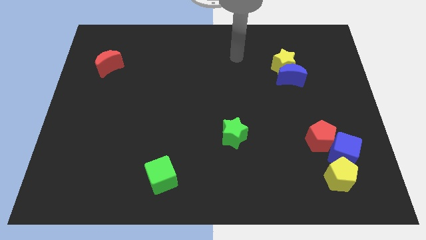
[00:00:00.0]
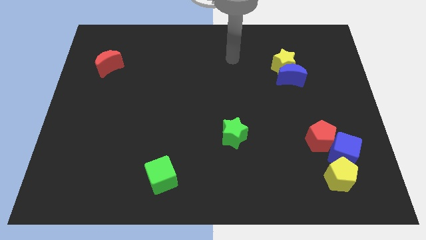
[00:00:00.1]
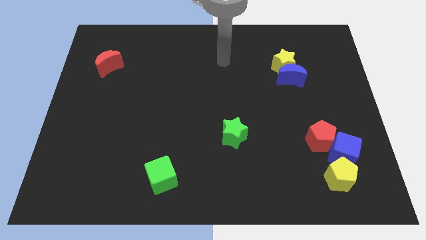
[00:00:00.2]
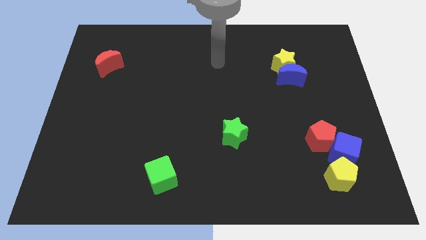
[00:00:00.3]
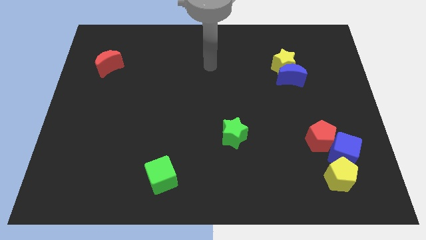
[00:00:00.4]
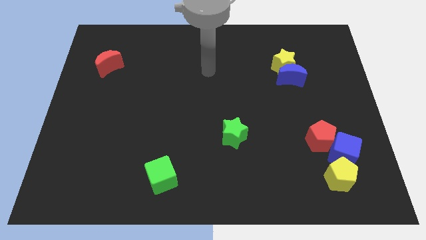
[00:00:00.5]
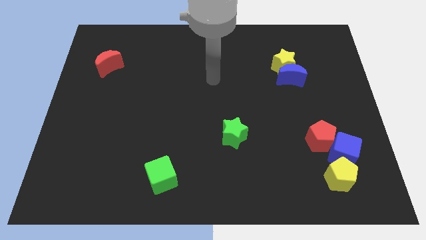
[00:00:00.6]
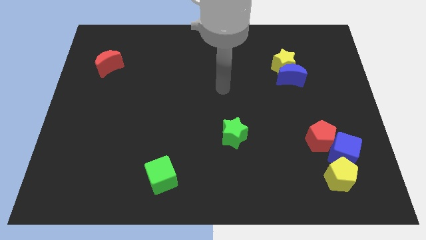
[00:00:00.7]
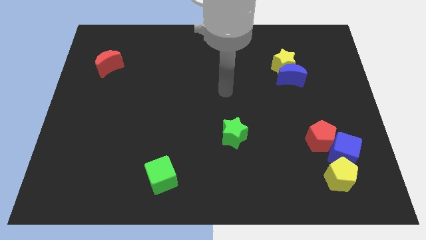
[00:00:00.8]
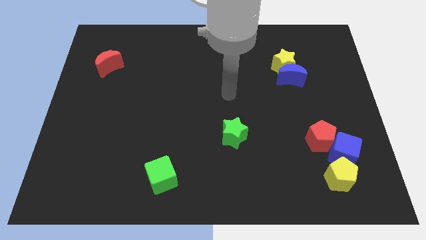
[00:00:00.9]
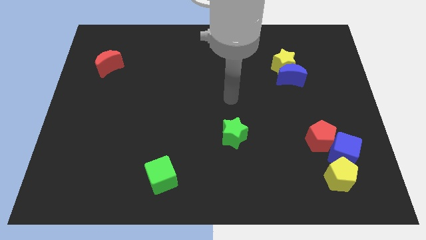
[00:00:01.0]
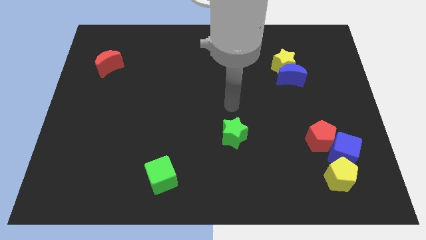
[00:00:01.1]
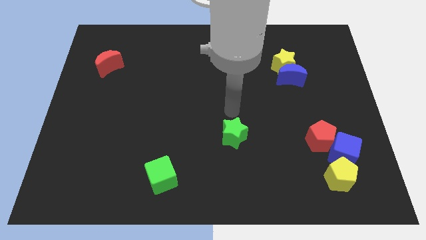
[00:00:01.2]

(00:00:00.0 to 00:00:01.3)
point your hand above the green star

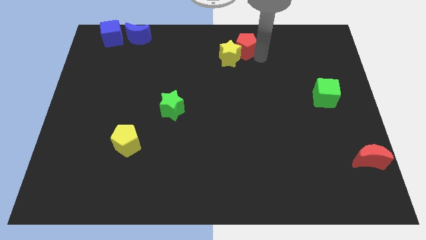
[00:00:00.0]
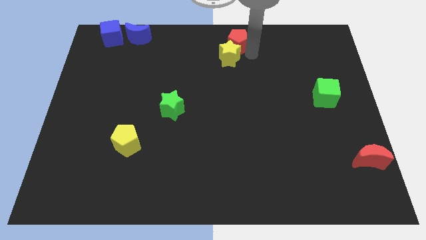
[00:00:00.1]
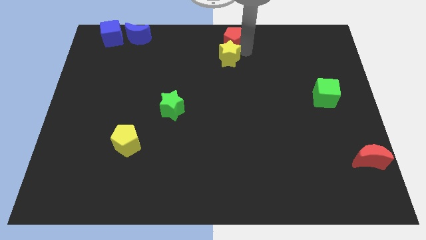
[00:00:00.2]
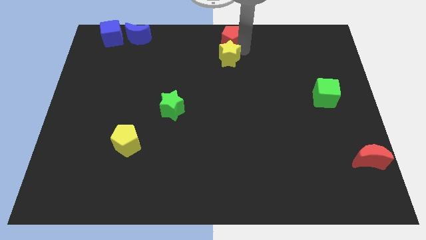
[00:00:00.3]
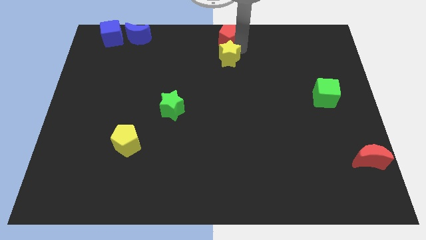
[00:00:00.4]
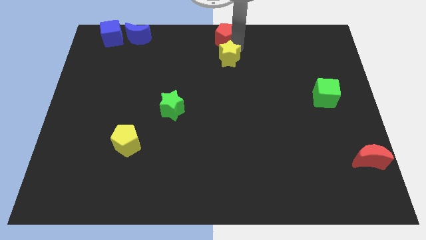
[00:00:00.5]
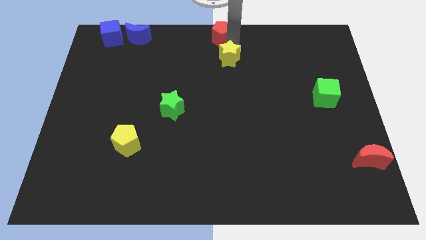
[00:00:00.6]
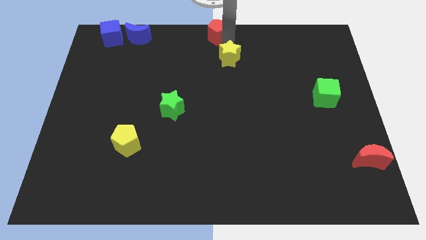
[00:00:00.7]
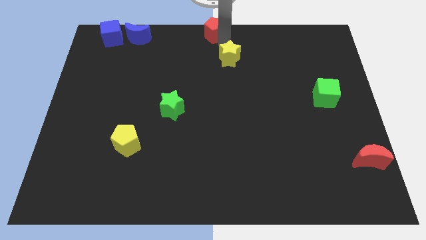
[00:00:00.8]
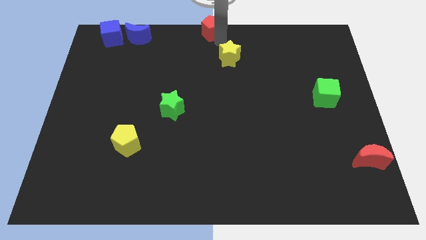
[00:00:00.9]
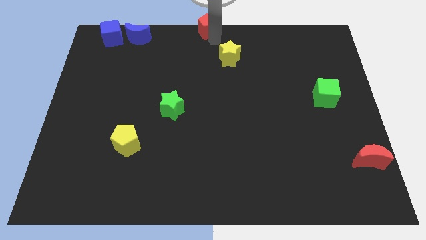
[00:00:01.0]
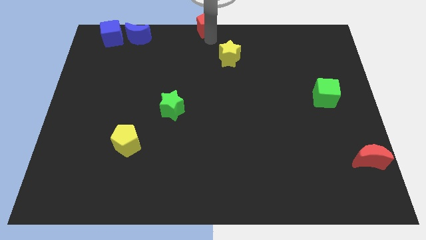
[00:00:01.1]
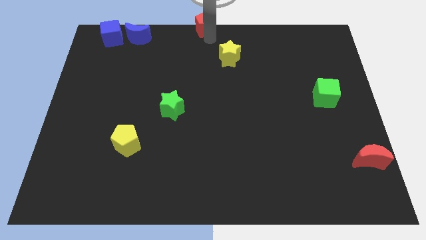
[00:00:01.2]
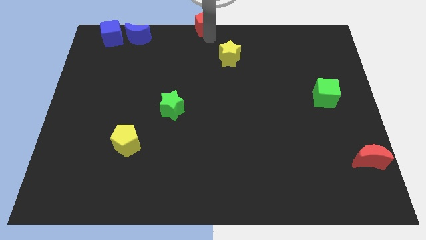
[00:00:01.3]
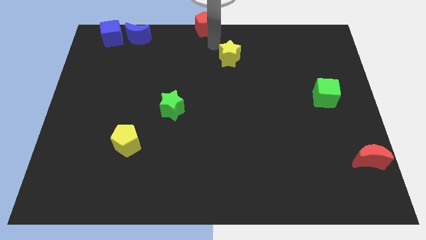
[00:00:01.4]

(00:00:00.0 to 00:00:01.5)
move red pentagon on the top center of the board

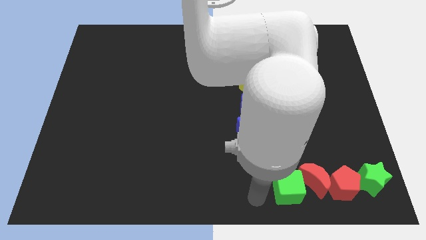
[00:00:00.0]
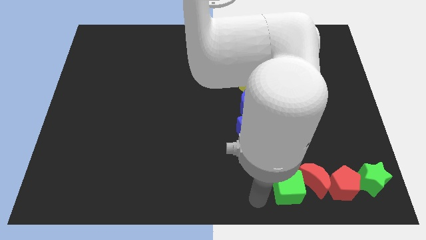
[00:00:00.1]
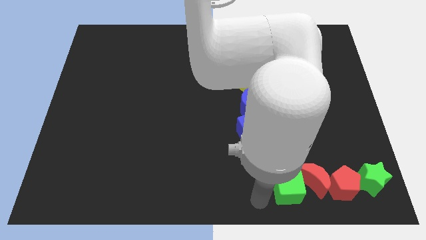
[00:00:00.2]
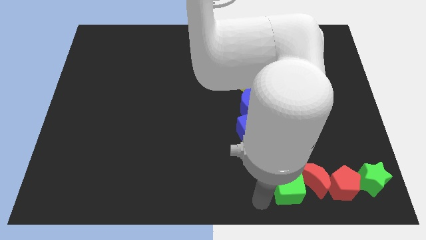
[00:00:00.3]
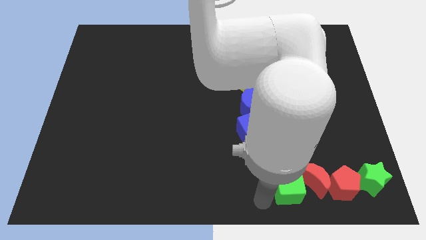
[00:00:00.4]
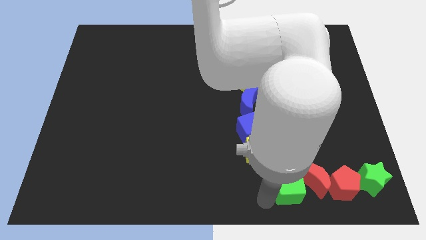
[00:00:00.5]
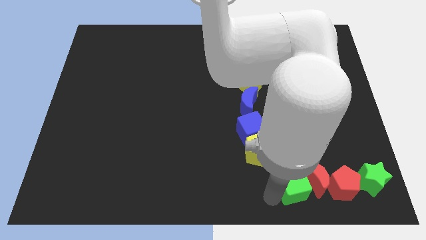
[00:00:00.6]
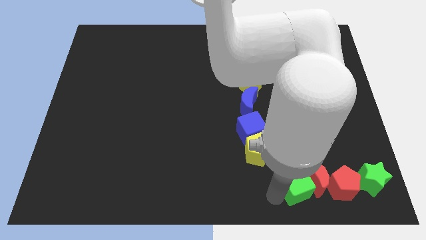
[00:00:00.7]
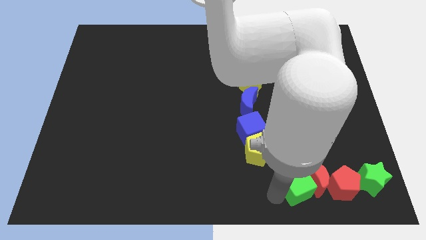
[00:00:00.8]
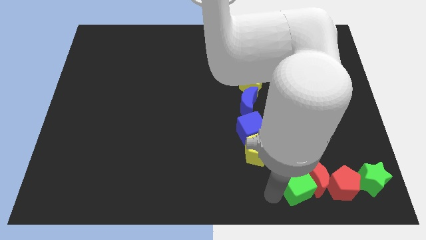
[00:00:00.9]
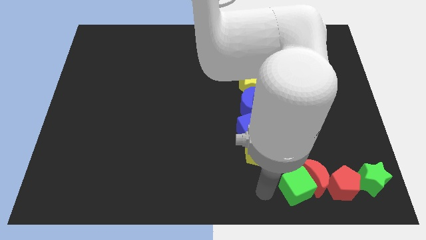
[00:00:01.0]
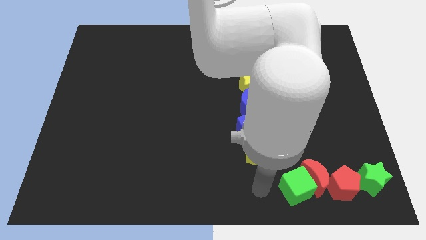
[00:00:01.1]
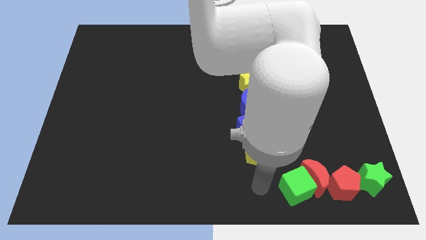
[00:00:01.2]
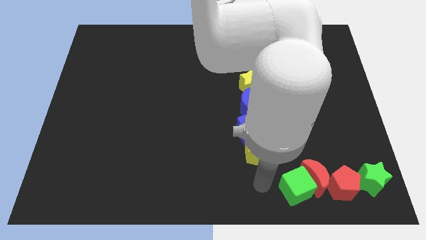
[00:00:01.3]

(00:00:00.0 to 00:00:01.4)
push the green cube into the red crescent

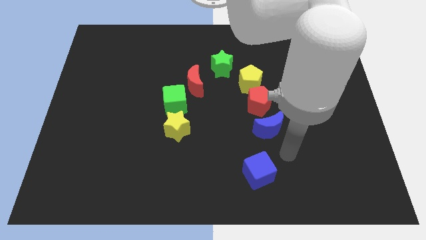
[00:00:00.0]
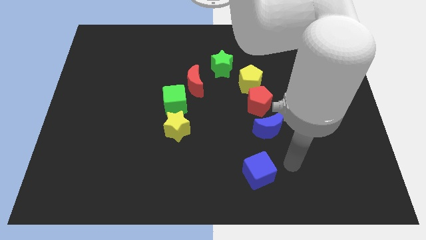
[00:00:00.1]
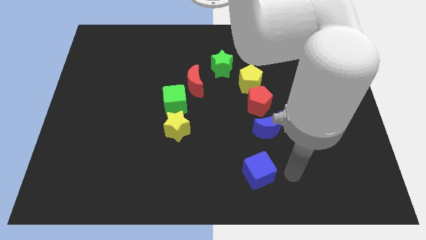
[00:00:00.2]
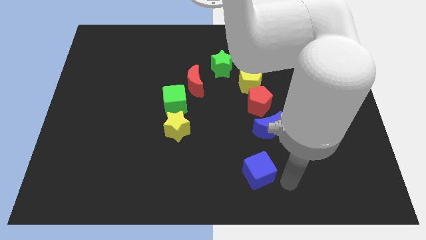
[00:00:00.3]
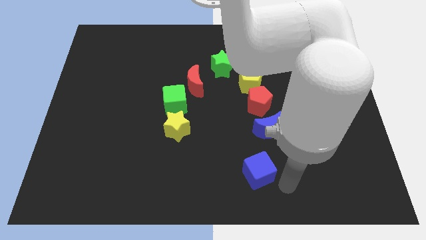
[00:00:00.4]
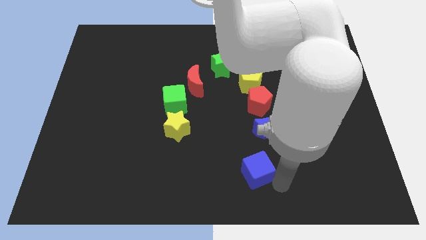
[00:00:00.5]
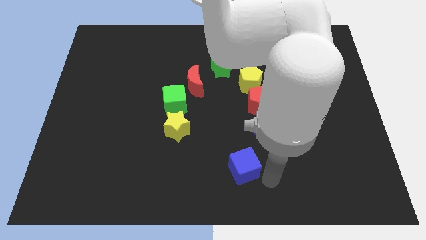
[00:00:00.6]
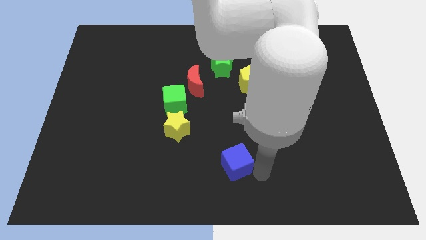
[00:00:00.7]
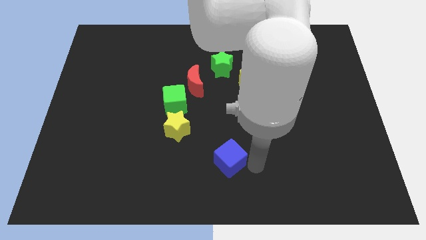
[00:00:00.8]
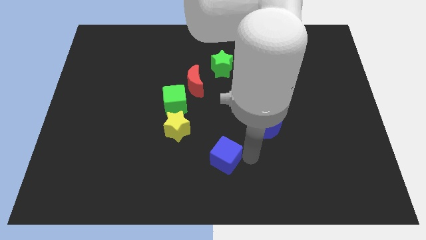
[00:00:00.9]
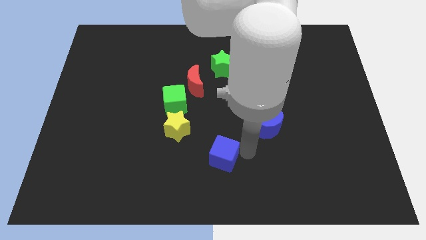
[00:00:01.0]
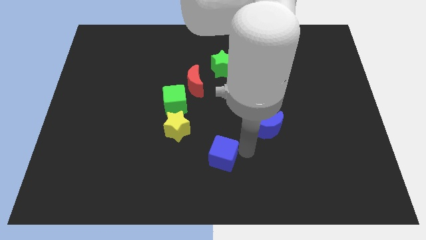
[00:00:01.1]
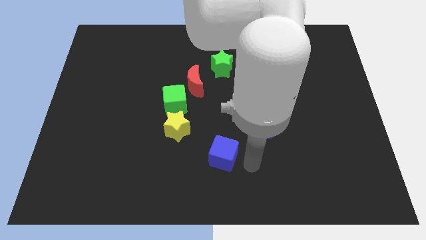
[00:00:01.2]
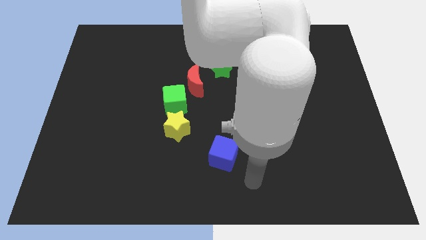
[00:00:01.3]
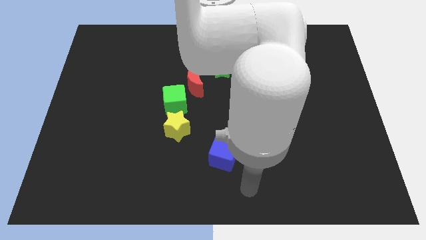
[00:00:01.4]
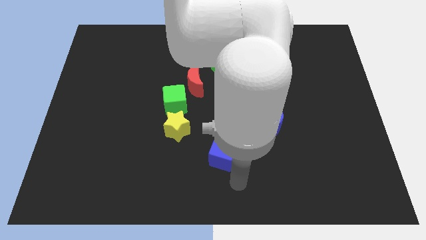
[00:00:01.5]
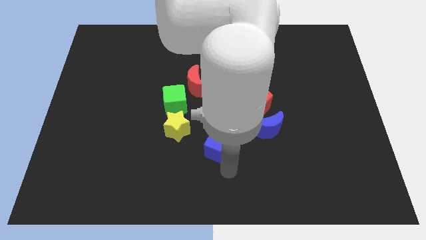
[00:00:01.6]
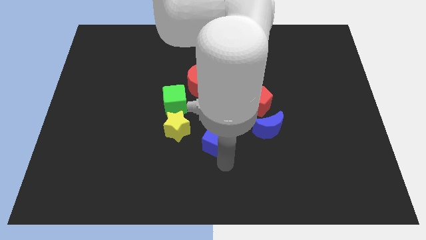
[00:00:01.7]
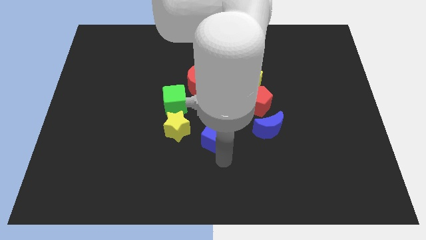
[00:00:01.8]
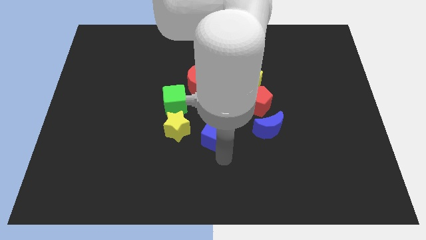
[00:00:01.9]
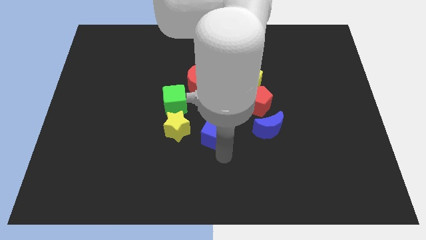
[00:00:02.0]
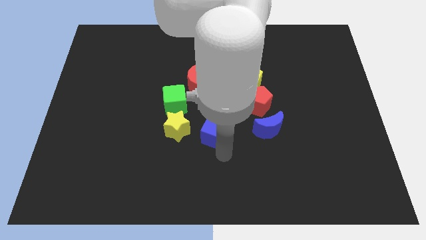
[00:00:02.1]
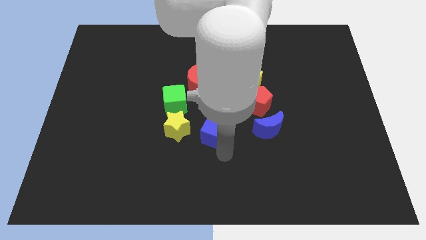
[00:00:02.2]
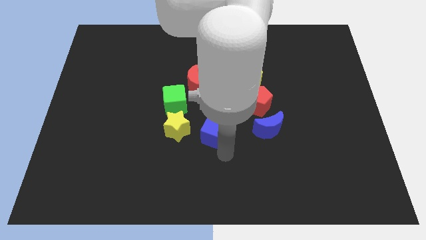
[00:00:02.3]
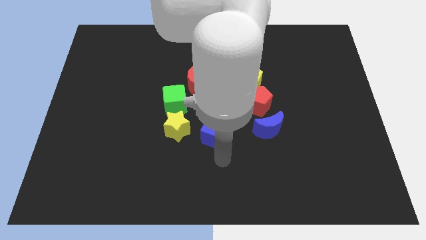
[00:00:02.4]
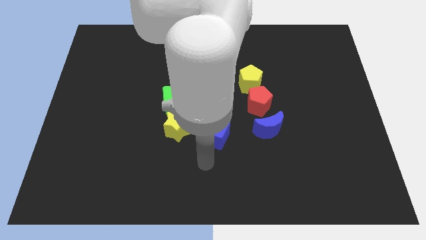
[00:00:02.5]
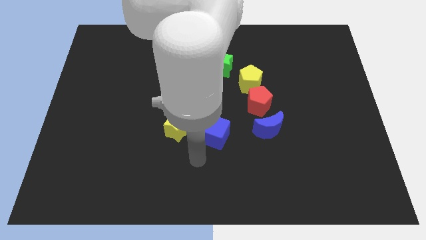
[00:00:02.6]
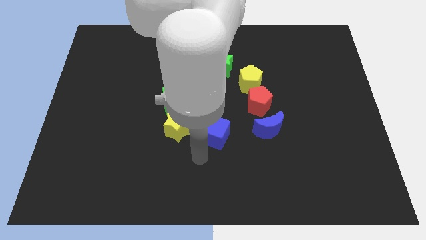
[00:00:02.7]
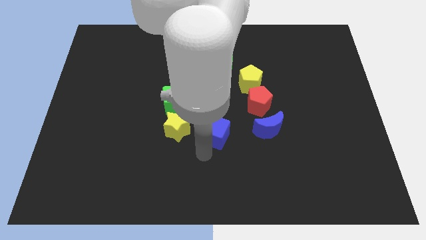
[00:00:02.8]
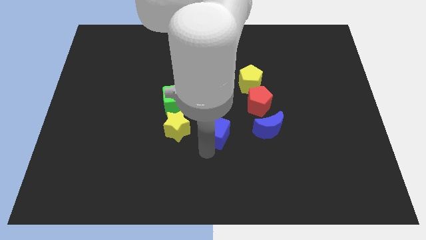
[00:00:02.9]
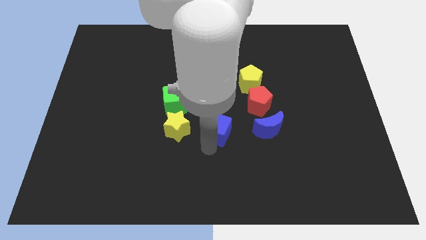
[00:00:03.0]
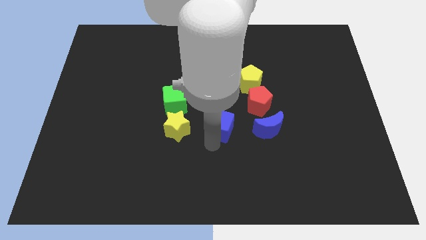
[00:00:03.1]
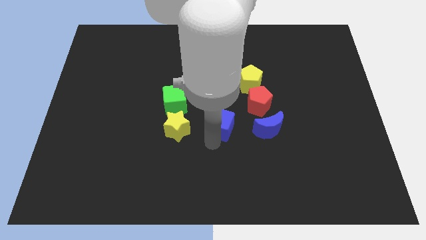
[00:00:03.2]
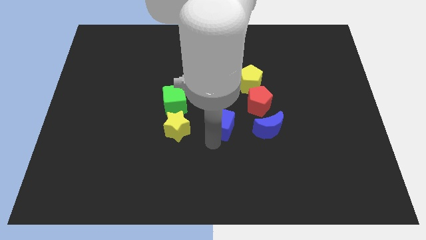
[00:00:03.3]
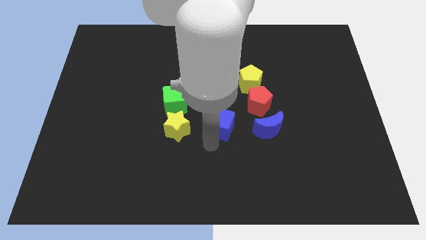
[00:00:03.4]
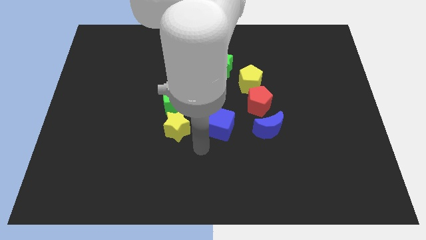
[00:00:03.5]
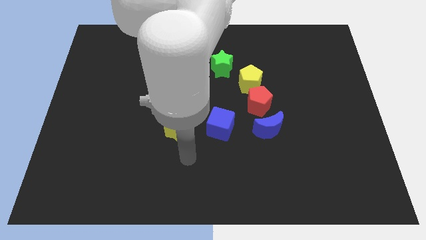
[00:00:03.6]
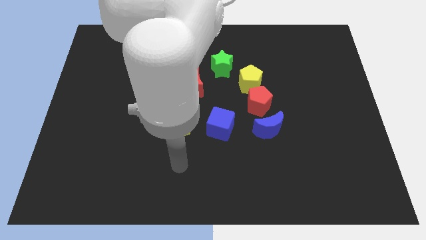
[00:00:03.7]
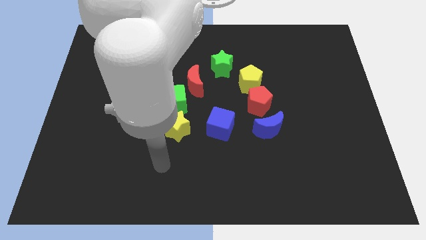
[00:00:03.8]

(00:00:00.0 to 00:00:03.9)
push the blue cube towards the center of the board

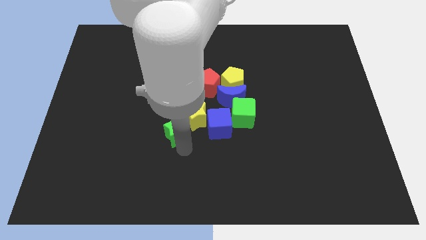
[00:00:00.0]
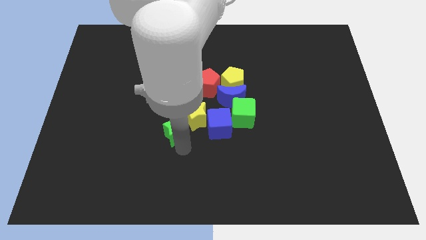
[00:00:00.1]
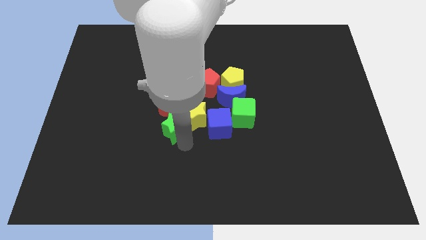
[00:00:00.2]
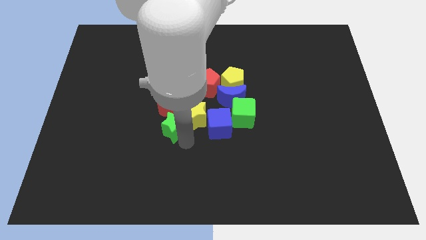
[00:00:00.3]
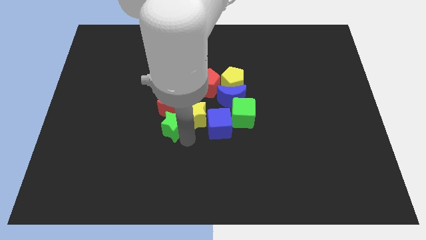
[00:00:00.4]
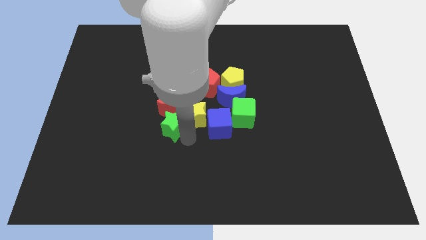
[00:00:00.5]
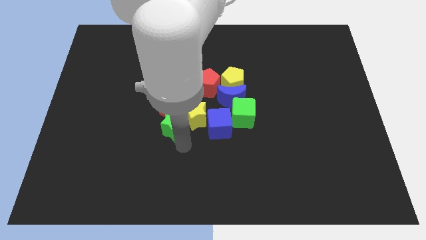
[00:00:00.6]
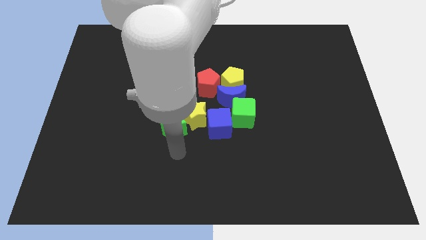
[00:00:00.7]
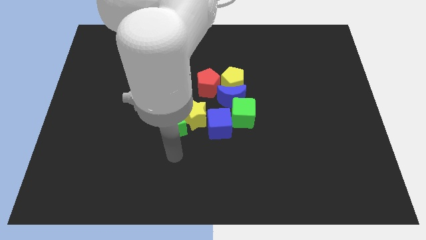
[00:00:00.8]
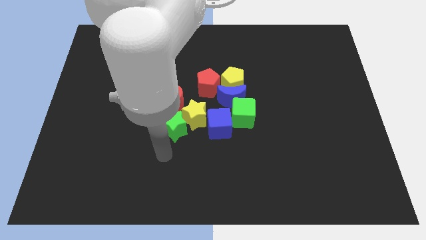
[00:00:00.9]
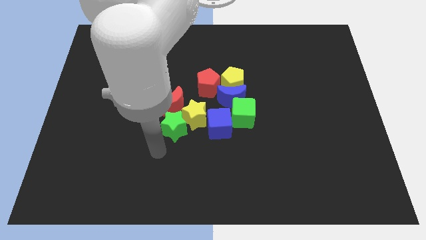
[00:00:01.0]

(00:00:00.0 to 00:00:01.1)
move green star towards red moon
